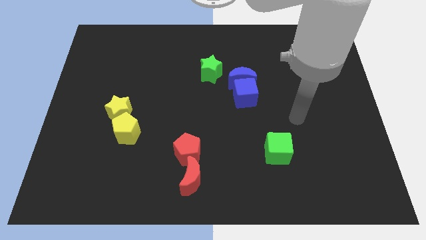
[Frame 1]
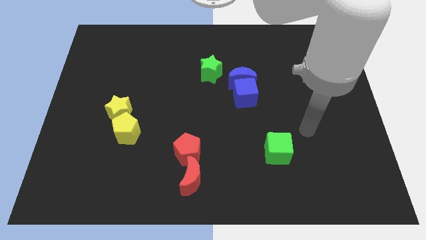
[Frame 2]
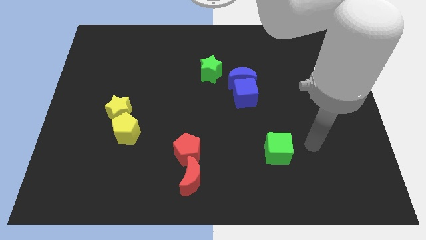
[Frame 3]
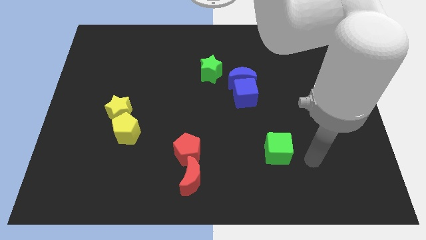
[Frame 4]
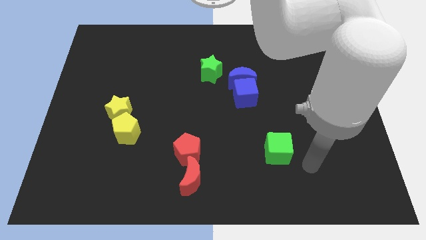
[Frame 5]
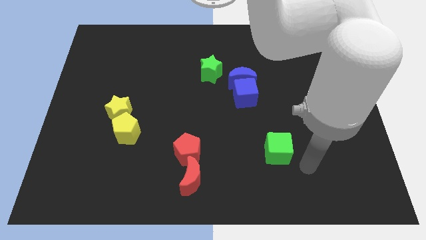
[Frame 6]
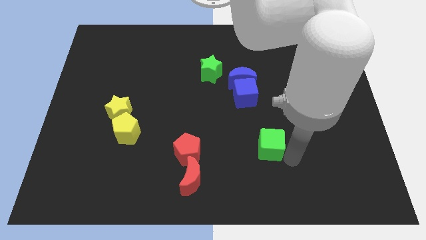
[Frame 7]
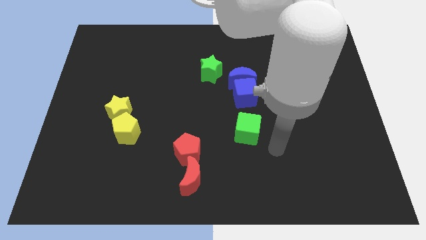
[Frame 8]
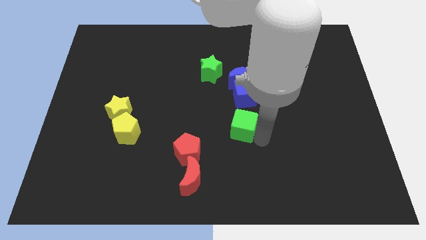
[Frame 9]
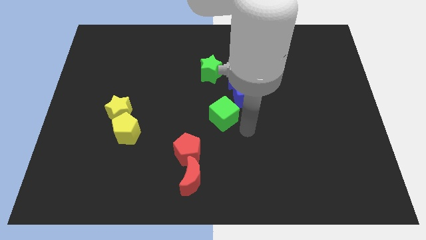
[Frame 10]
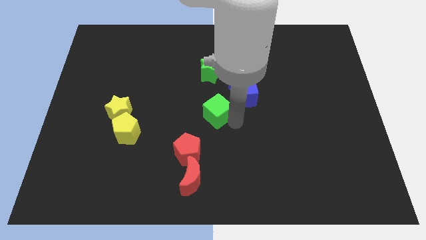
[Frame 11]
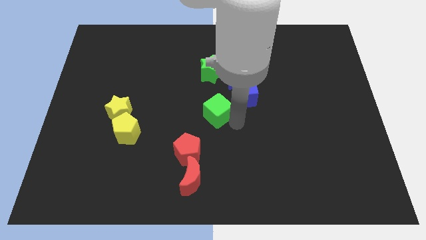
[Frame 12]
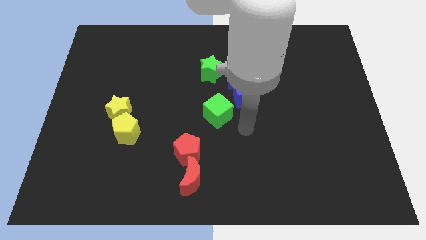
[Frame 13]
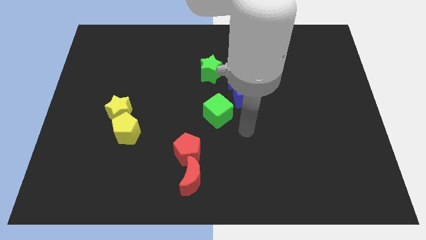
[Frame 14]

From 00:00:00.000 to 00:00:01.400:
push the green cube below the green star

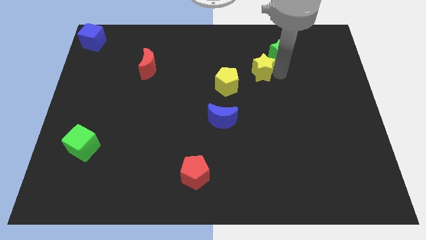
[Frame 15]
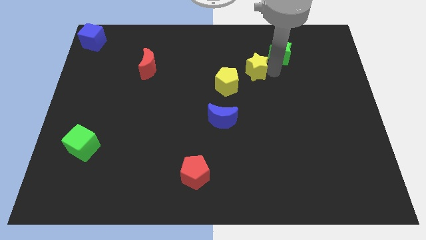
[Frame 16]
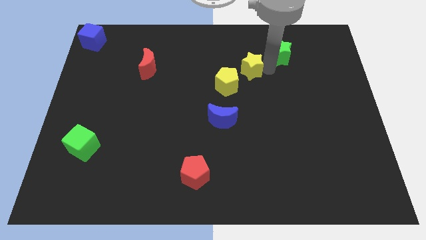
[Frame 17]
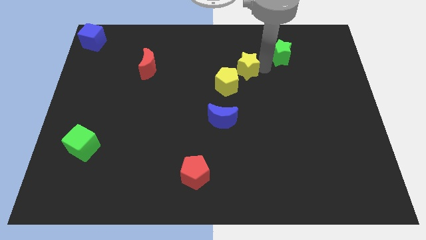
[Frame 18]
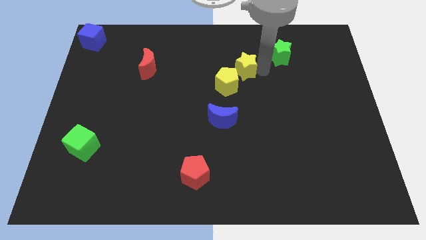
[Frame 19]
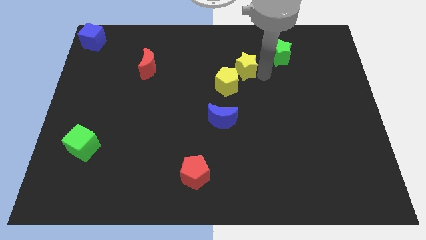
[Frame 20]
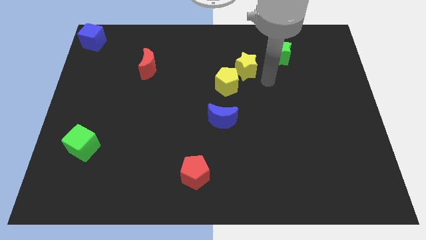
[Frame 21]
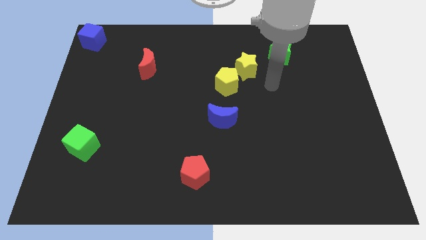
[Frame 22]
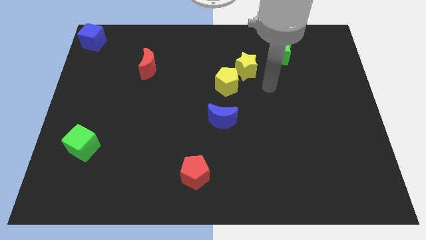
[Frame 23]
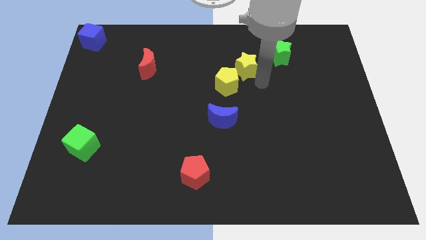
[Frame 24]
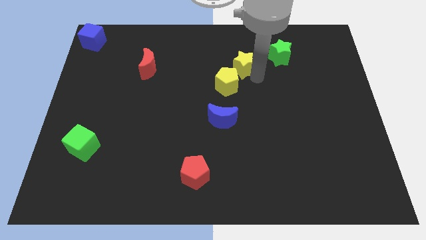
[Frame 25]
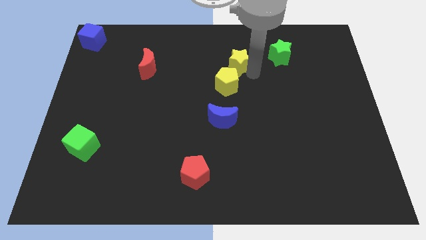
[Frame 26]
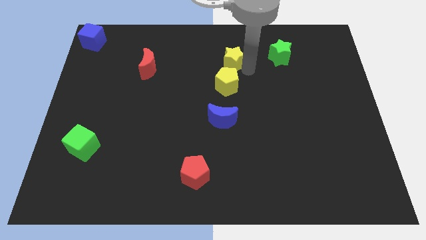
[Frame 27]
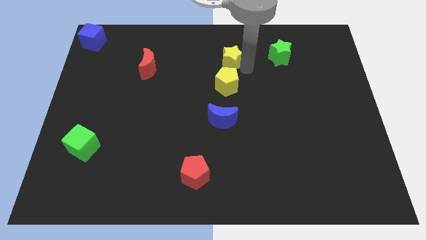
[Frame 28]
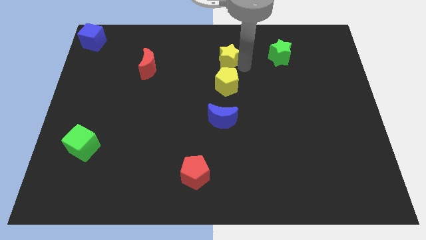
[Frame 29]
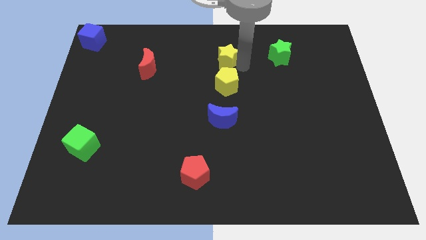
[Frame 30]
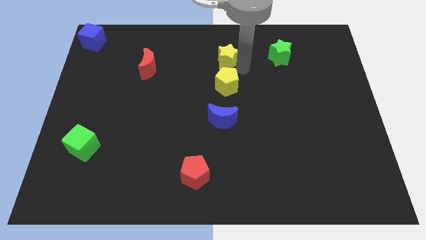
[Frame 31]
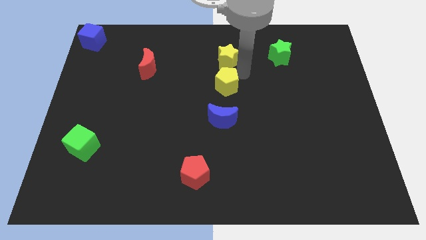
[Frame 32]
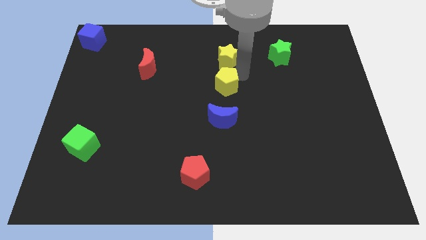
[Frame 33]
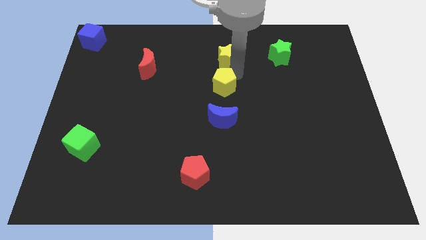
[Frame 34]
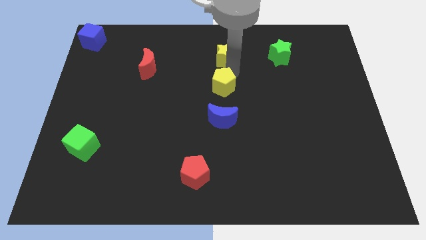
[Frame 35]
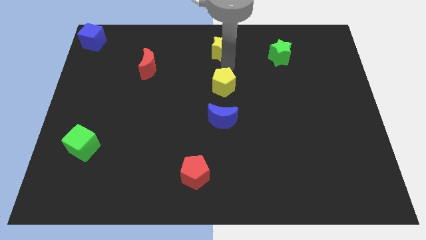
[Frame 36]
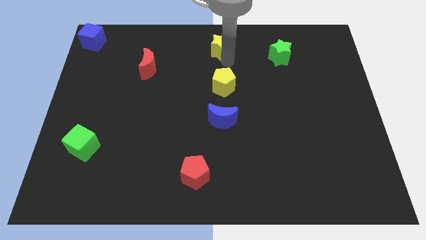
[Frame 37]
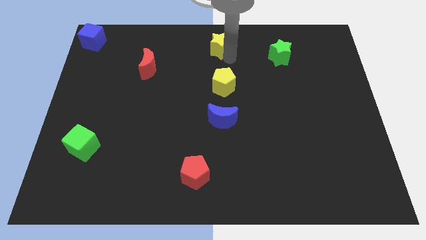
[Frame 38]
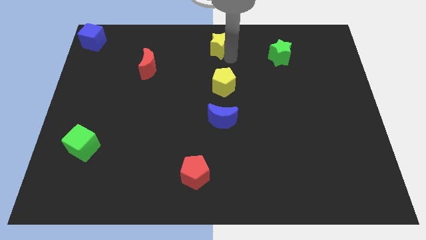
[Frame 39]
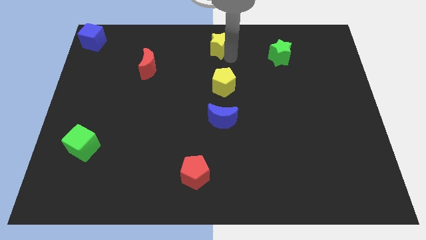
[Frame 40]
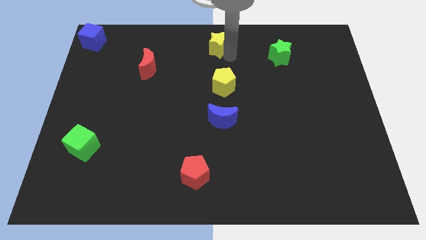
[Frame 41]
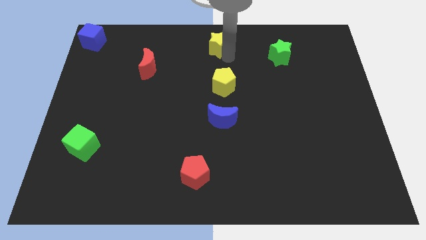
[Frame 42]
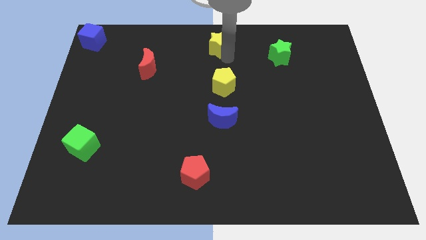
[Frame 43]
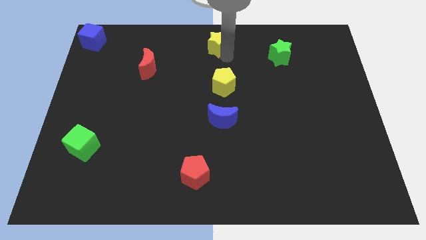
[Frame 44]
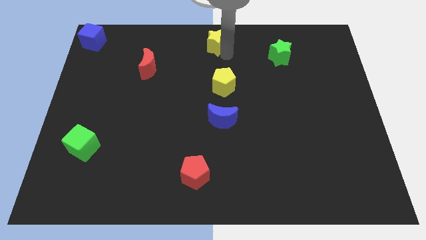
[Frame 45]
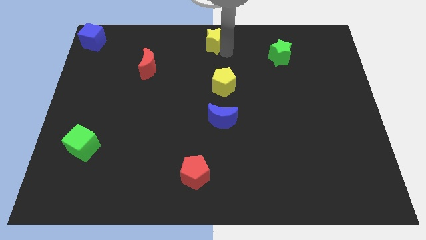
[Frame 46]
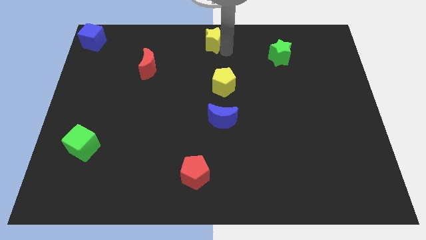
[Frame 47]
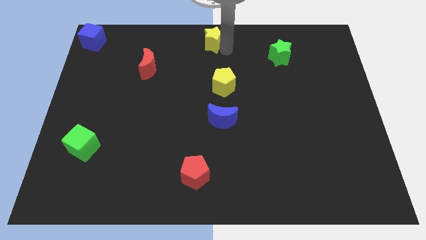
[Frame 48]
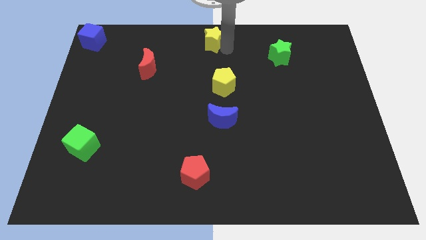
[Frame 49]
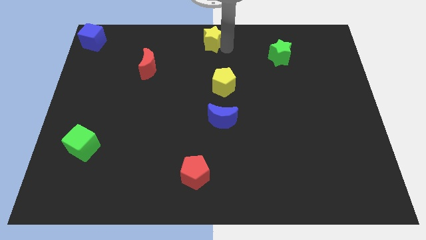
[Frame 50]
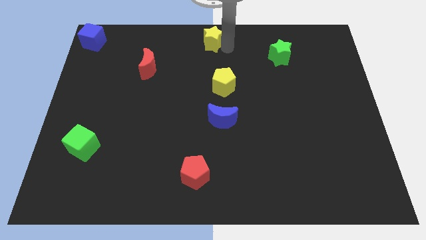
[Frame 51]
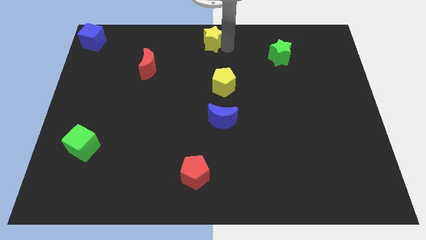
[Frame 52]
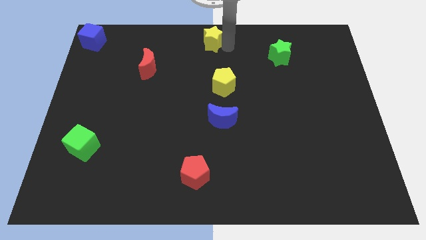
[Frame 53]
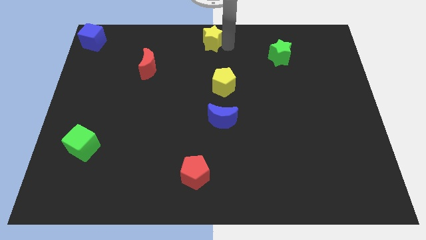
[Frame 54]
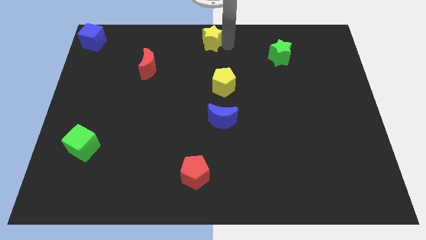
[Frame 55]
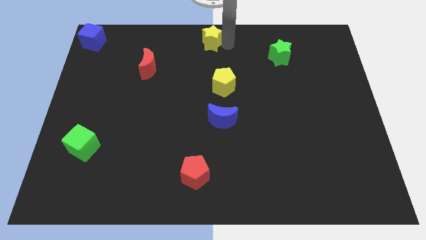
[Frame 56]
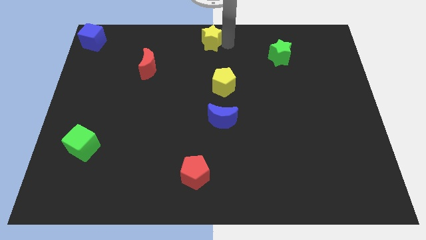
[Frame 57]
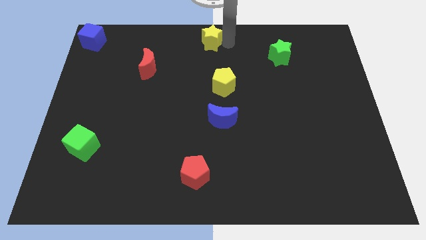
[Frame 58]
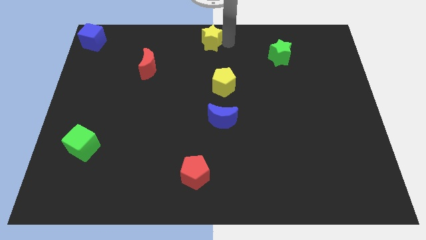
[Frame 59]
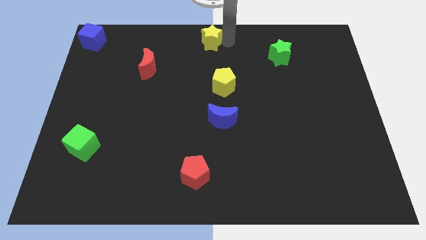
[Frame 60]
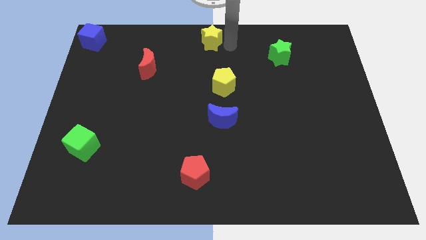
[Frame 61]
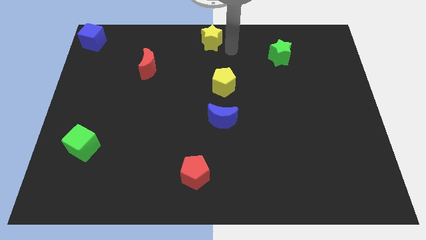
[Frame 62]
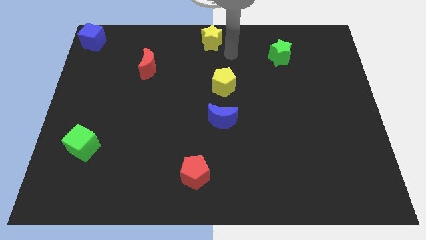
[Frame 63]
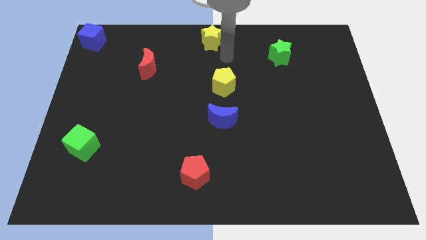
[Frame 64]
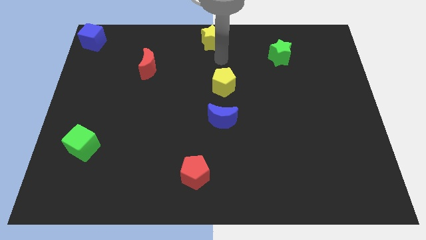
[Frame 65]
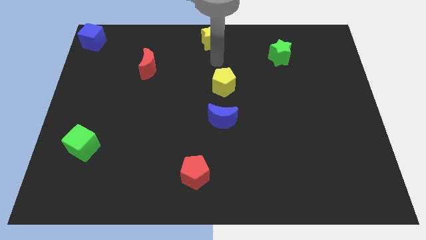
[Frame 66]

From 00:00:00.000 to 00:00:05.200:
move the yellow star above the yellow pentagon

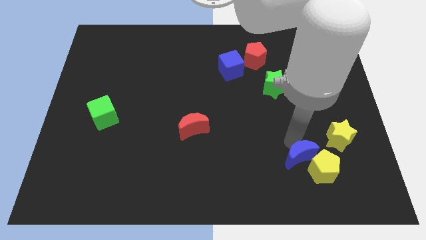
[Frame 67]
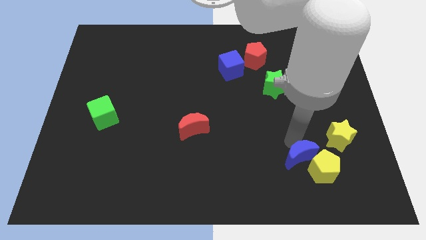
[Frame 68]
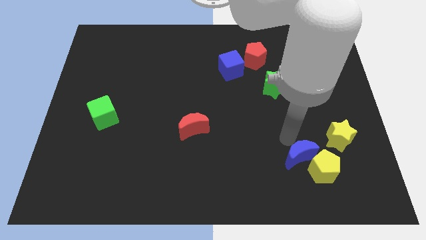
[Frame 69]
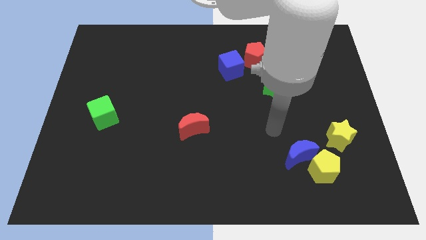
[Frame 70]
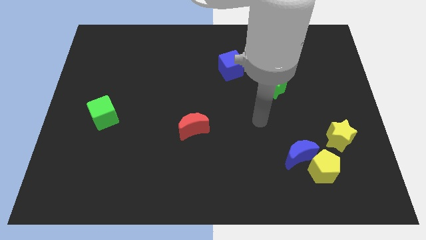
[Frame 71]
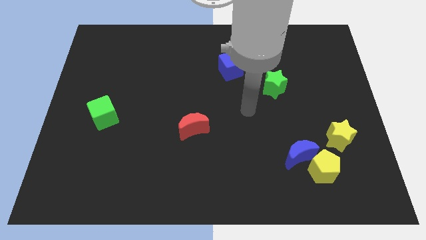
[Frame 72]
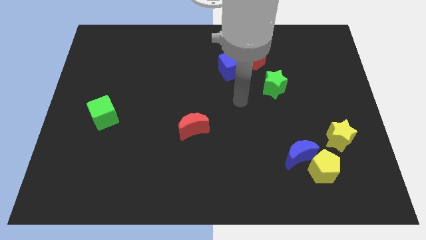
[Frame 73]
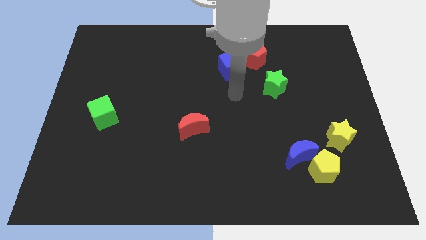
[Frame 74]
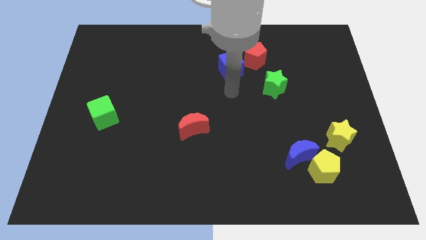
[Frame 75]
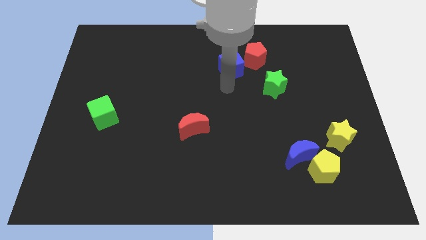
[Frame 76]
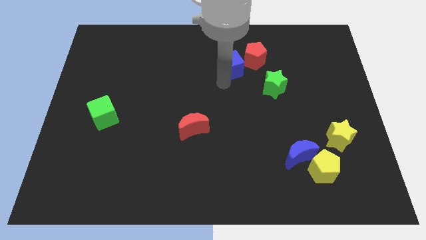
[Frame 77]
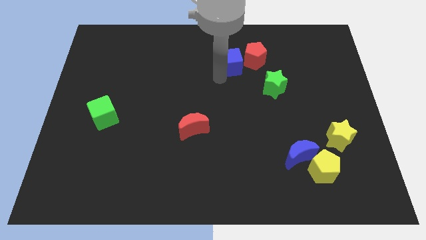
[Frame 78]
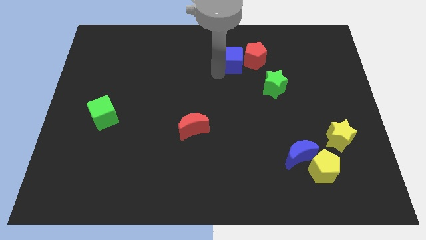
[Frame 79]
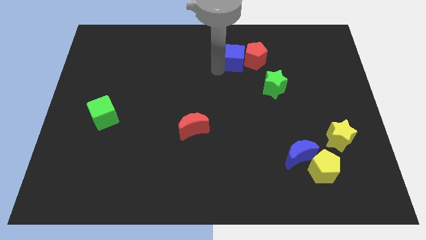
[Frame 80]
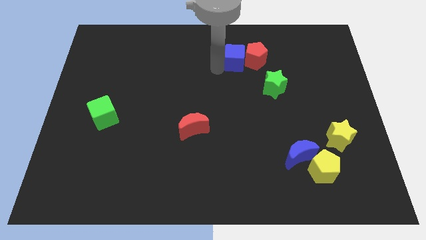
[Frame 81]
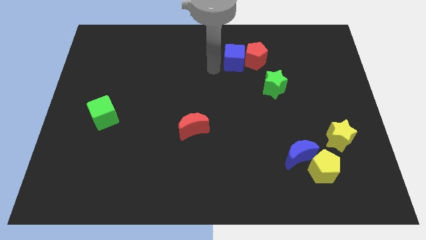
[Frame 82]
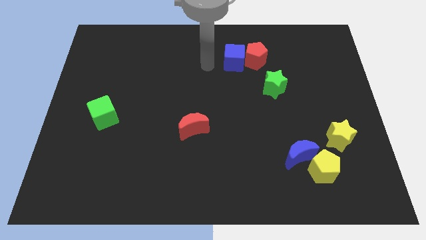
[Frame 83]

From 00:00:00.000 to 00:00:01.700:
adjust the blue cube at the left side of the red pentagon

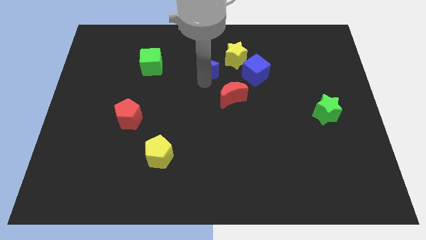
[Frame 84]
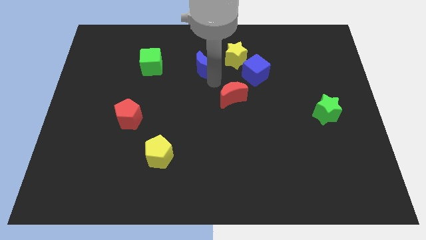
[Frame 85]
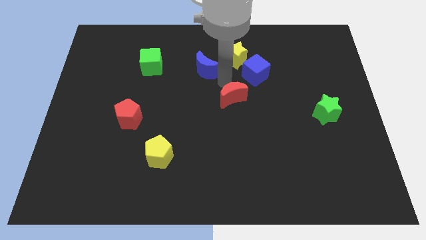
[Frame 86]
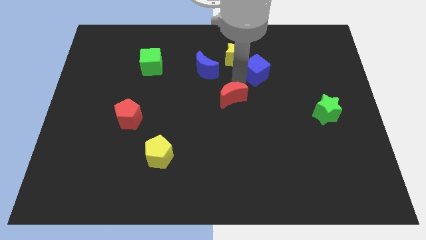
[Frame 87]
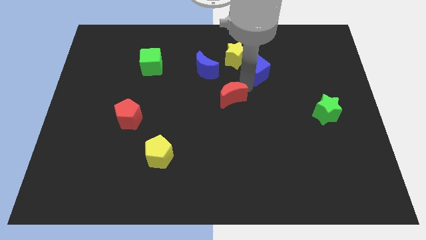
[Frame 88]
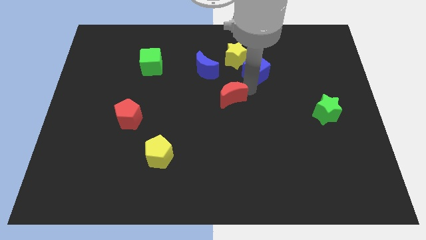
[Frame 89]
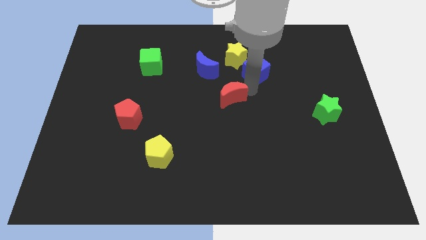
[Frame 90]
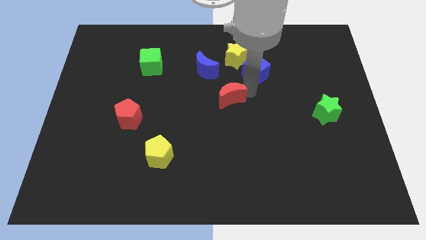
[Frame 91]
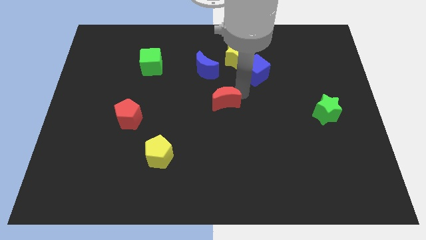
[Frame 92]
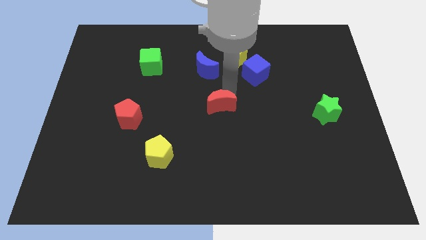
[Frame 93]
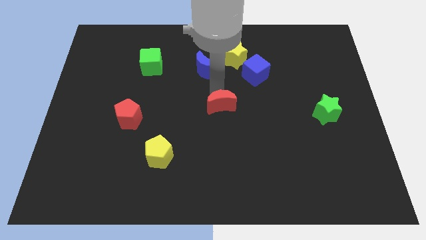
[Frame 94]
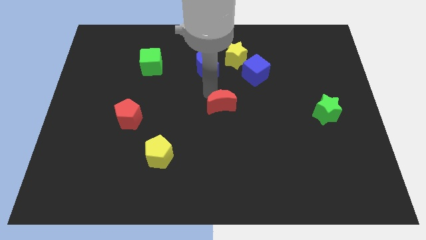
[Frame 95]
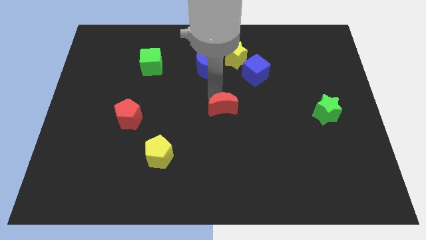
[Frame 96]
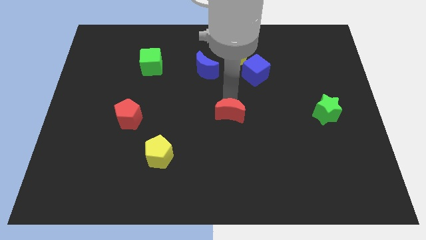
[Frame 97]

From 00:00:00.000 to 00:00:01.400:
move red moon to the middle of the board
